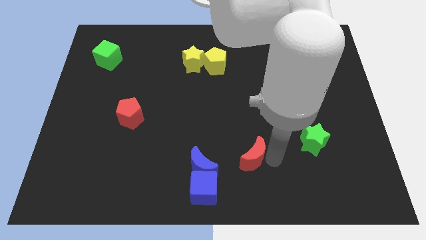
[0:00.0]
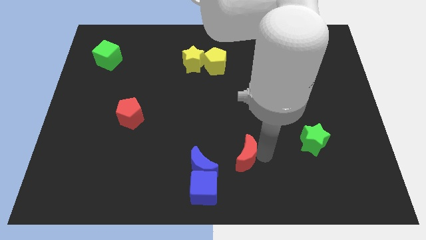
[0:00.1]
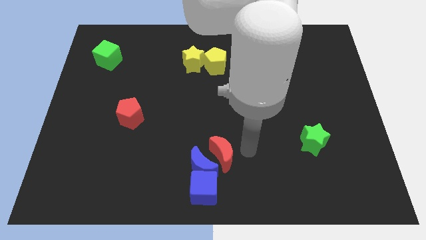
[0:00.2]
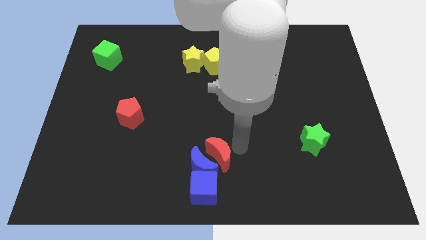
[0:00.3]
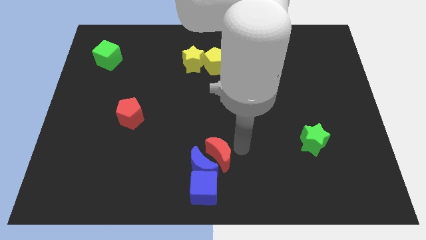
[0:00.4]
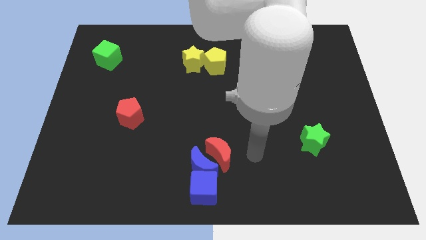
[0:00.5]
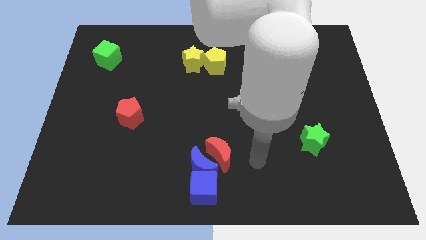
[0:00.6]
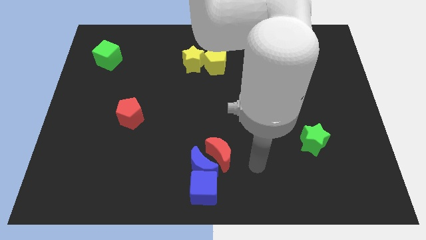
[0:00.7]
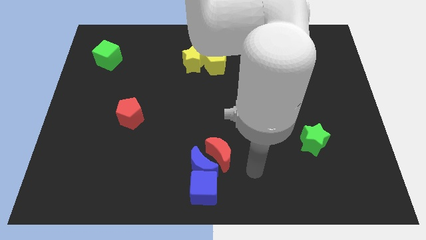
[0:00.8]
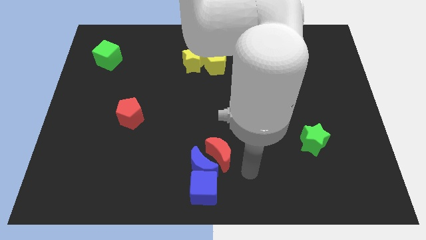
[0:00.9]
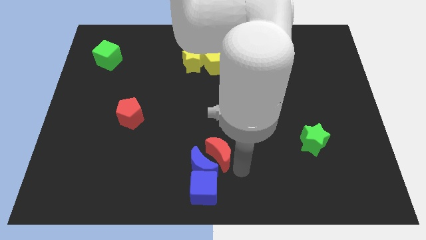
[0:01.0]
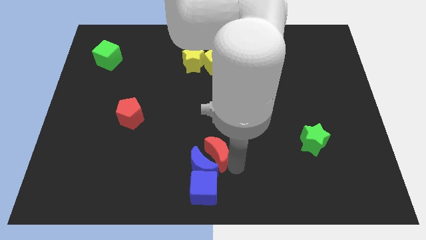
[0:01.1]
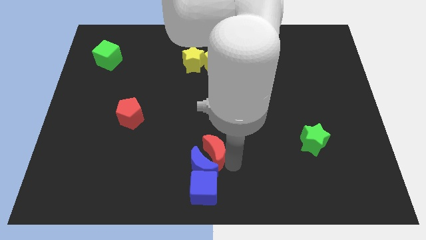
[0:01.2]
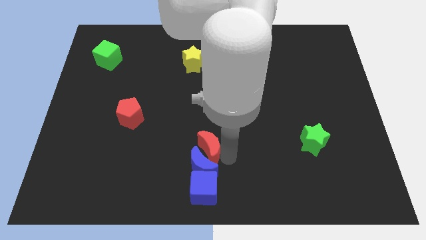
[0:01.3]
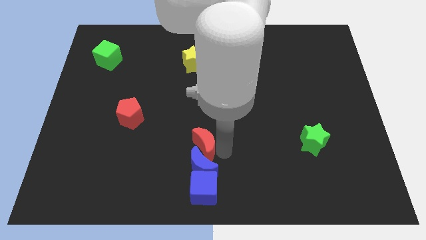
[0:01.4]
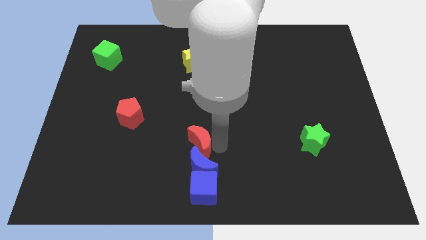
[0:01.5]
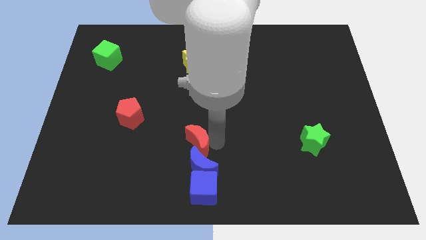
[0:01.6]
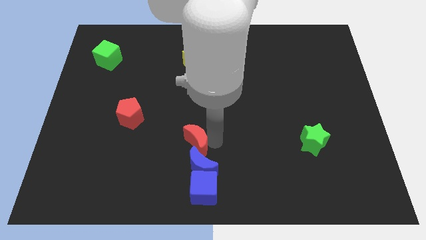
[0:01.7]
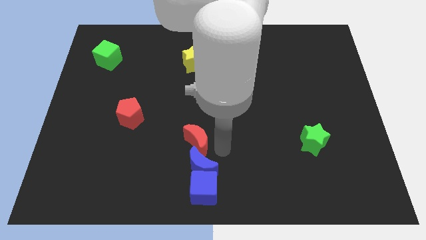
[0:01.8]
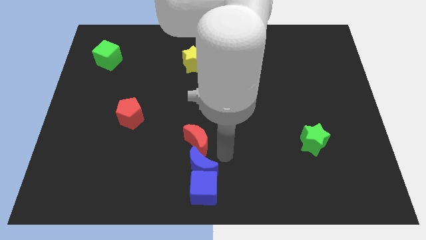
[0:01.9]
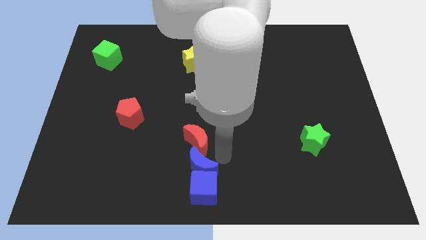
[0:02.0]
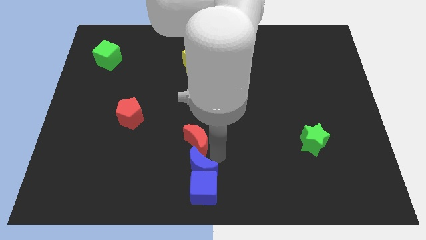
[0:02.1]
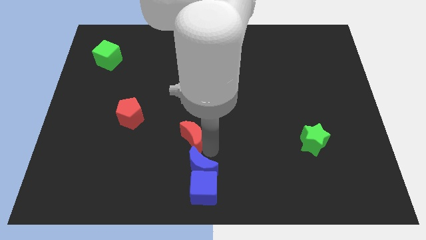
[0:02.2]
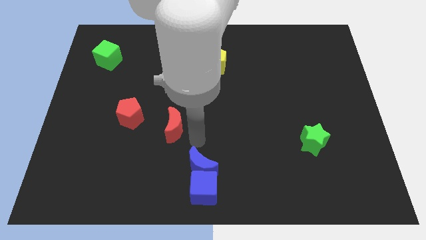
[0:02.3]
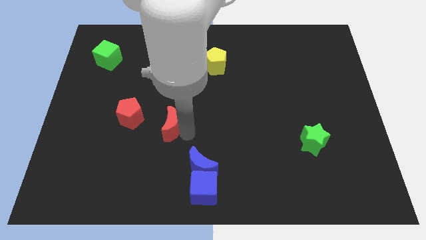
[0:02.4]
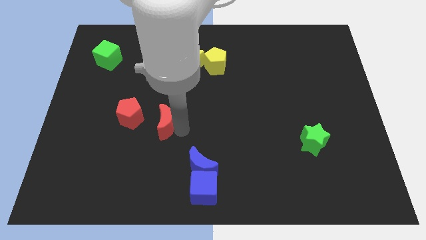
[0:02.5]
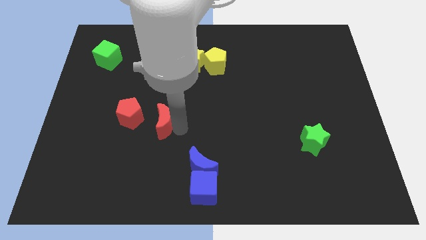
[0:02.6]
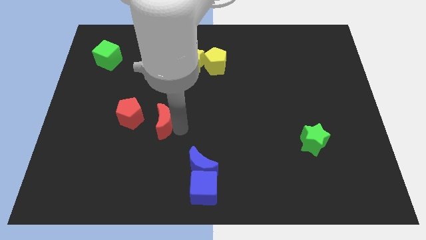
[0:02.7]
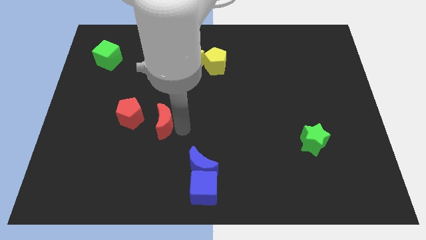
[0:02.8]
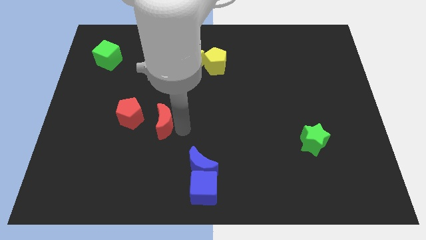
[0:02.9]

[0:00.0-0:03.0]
place the red moon diagonal to blue moon

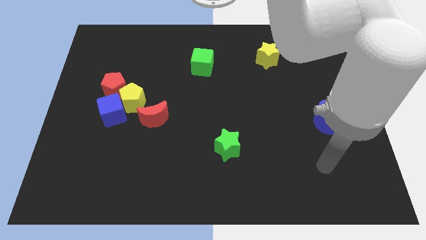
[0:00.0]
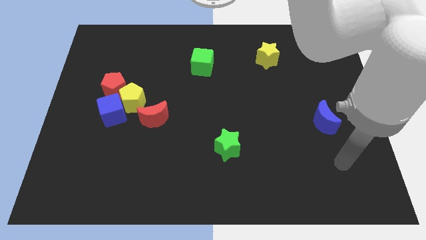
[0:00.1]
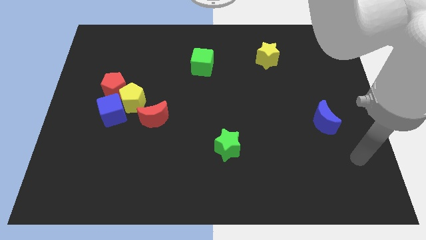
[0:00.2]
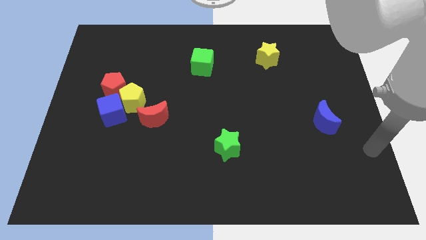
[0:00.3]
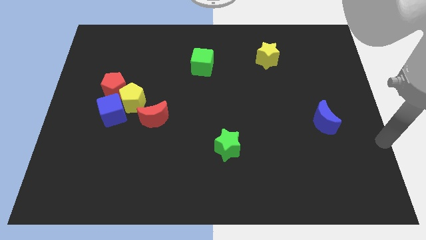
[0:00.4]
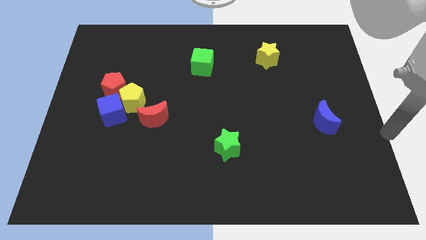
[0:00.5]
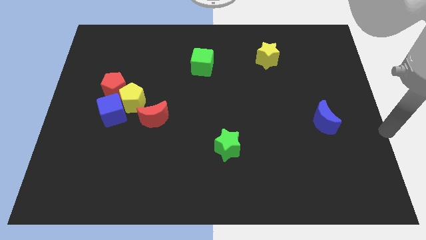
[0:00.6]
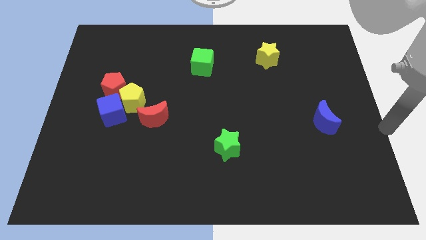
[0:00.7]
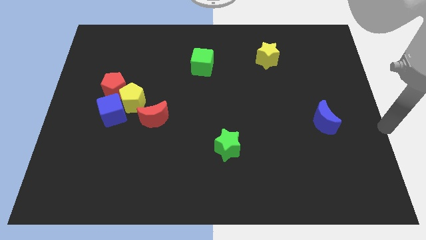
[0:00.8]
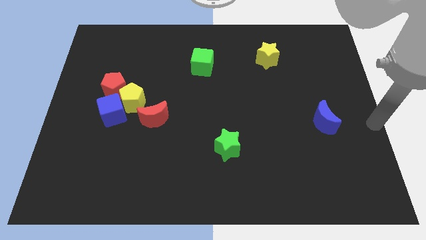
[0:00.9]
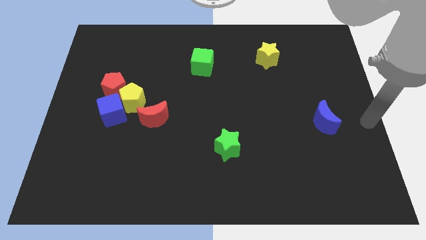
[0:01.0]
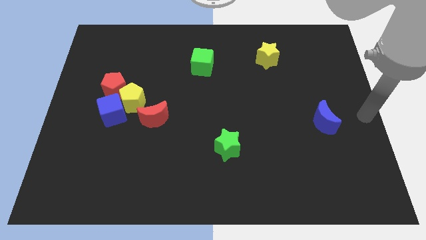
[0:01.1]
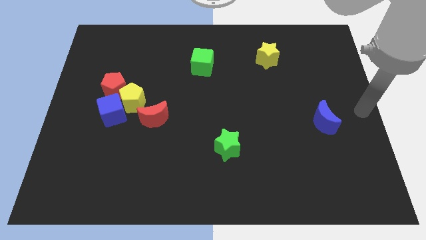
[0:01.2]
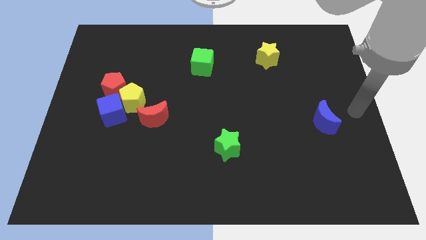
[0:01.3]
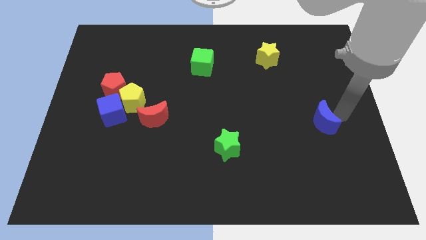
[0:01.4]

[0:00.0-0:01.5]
place the arm to the right of the blue moon

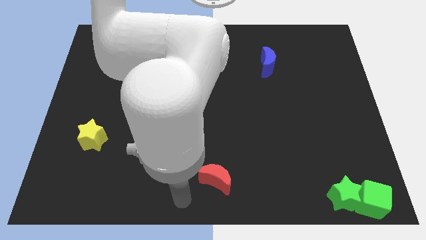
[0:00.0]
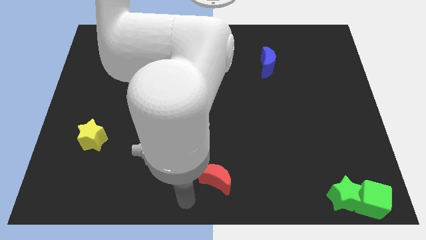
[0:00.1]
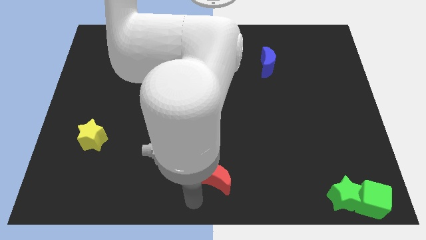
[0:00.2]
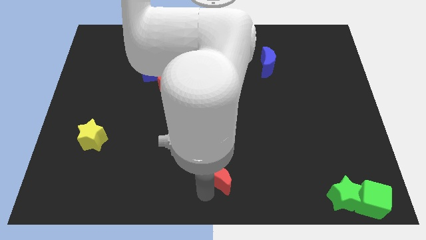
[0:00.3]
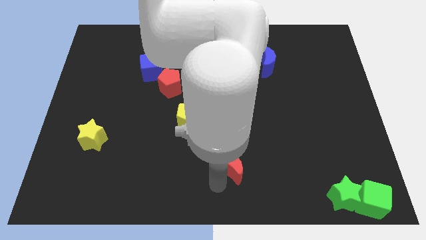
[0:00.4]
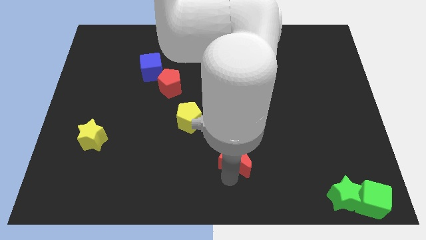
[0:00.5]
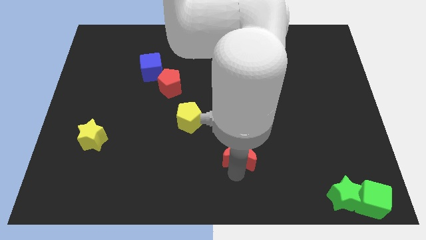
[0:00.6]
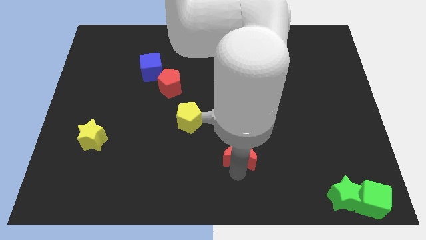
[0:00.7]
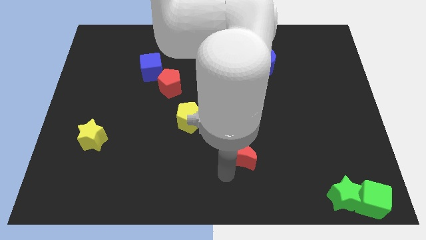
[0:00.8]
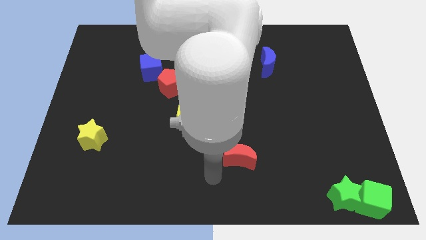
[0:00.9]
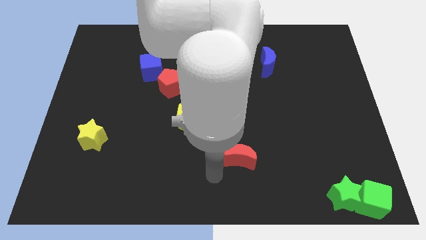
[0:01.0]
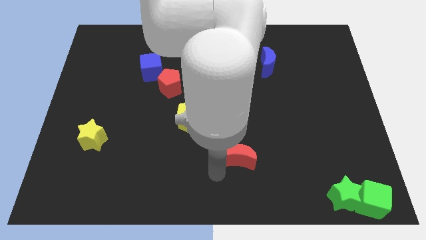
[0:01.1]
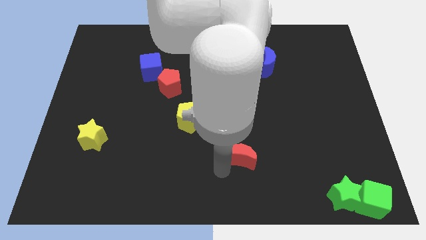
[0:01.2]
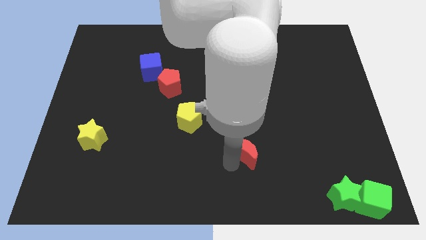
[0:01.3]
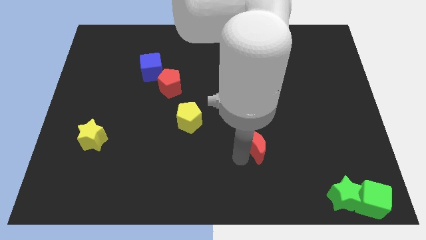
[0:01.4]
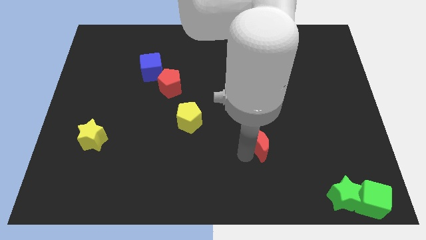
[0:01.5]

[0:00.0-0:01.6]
move the red moon diagonally to the yellow pentagon

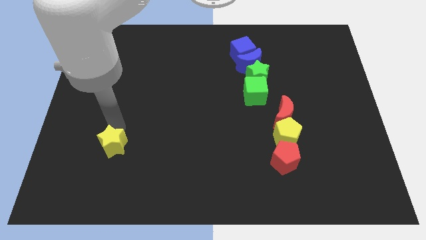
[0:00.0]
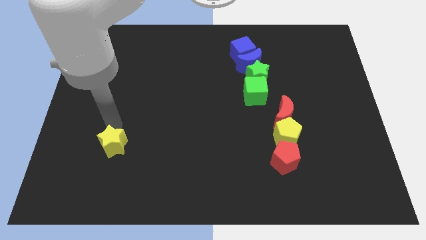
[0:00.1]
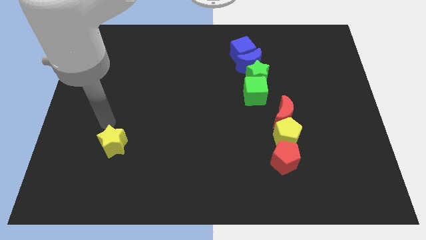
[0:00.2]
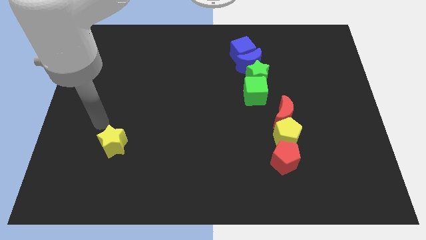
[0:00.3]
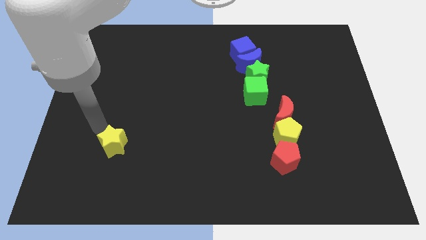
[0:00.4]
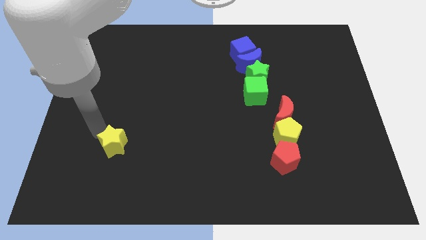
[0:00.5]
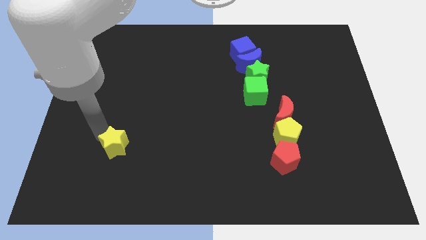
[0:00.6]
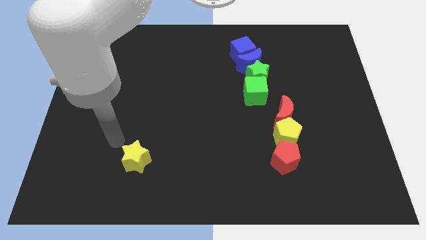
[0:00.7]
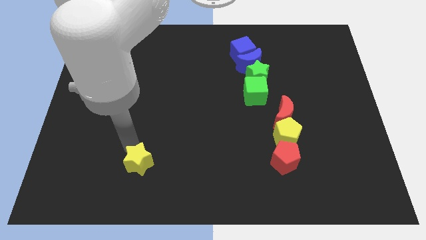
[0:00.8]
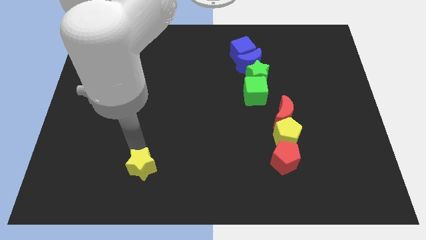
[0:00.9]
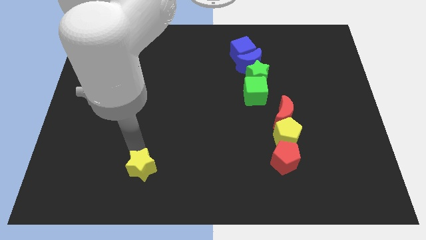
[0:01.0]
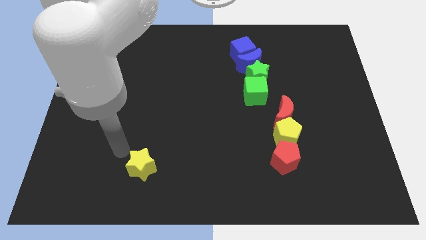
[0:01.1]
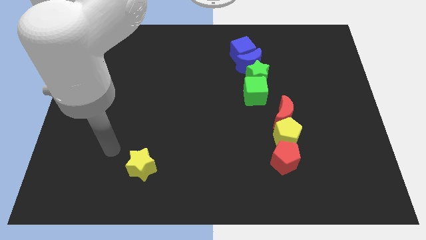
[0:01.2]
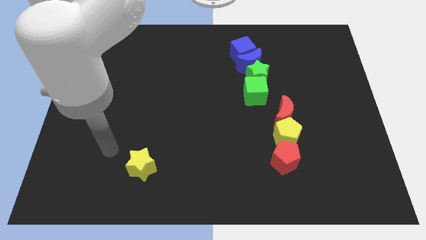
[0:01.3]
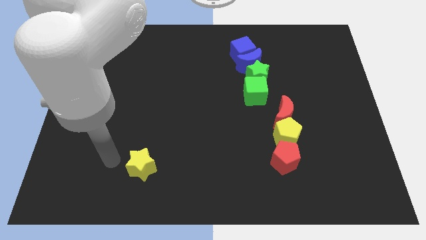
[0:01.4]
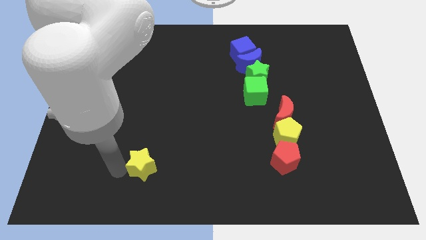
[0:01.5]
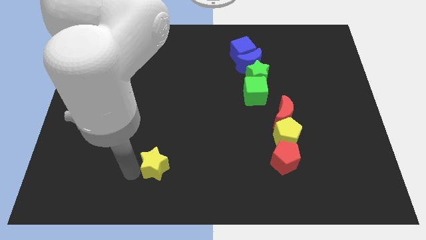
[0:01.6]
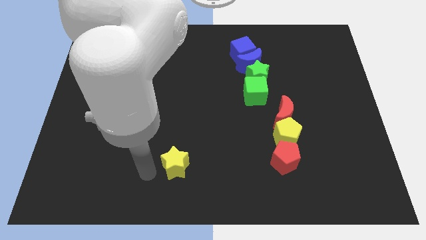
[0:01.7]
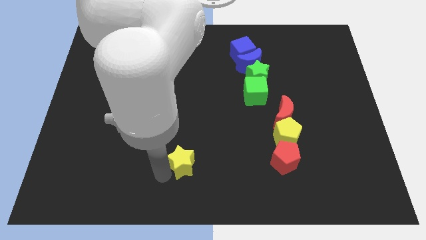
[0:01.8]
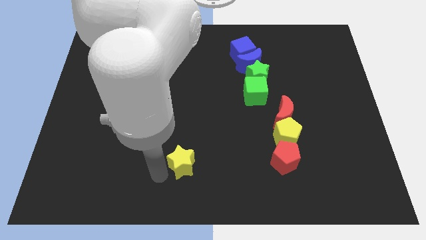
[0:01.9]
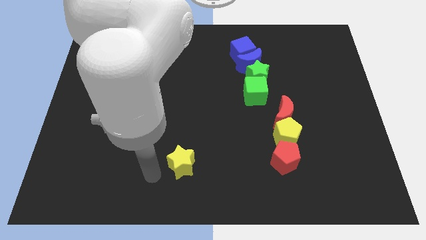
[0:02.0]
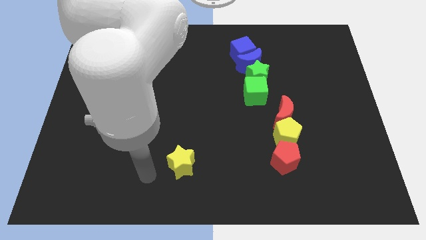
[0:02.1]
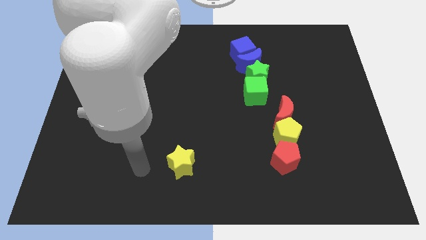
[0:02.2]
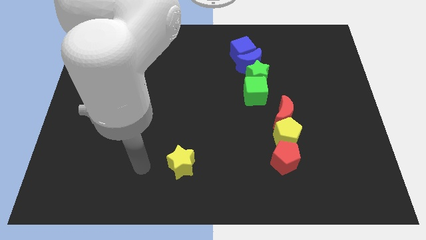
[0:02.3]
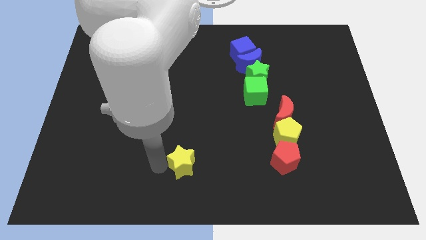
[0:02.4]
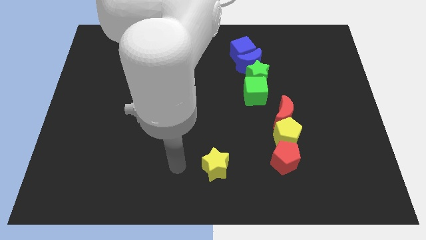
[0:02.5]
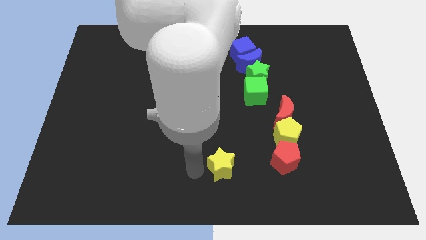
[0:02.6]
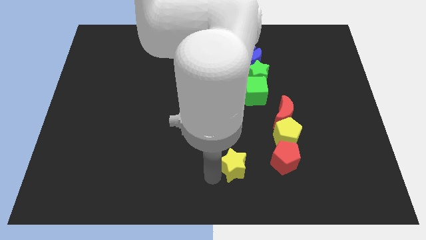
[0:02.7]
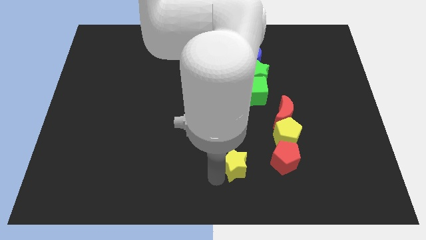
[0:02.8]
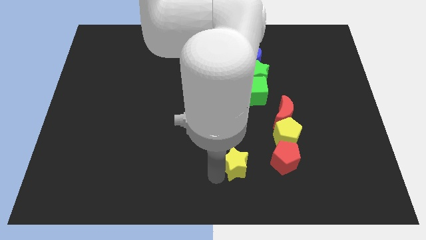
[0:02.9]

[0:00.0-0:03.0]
slide the yellow star towards the red pentagon
